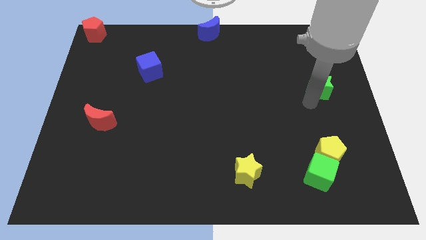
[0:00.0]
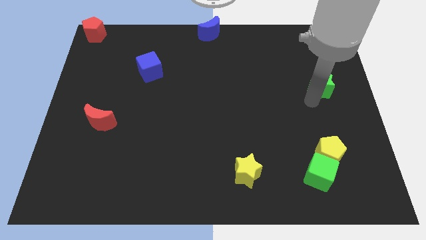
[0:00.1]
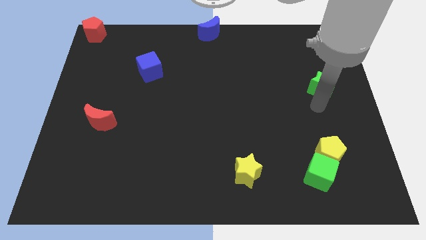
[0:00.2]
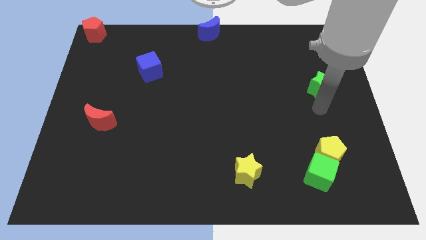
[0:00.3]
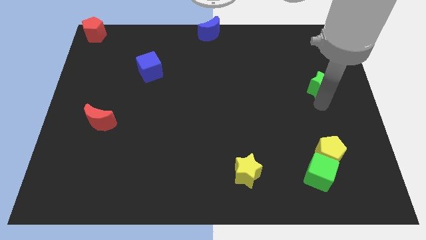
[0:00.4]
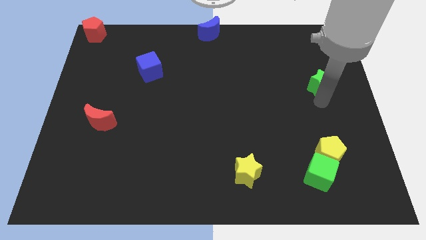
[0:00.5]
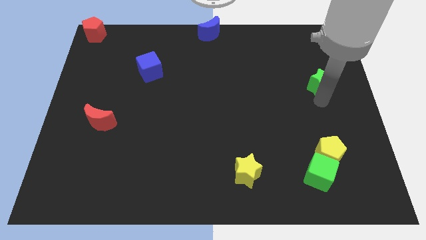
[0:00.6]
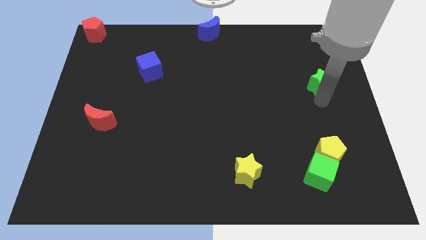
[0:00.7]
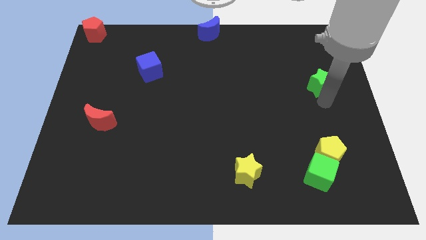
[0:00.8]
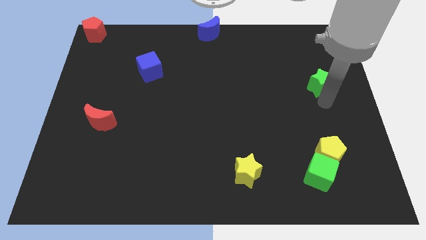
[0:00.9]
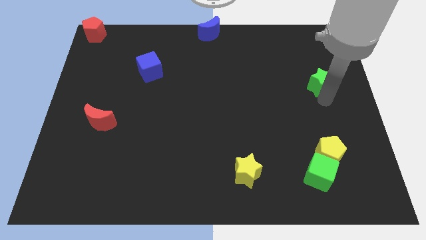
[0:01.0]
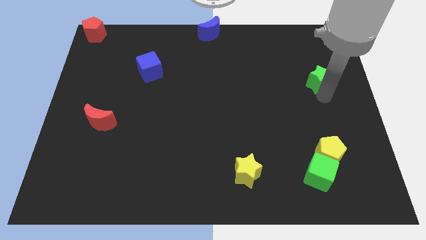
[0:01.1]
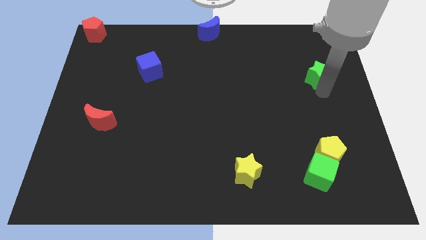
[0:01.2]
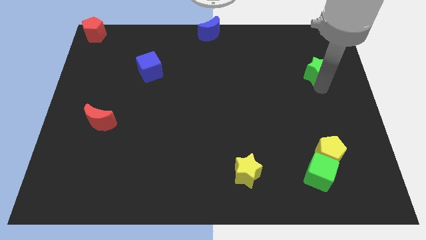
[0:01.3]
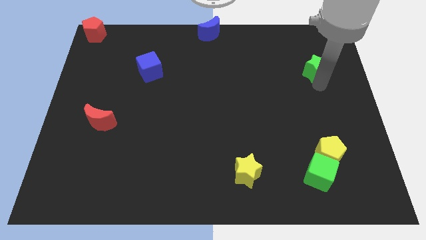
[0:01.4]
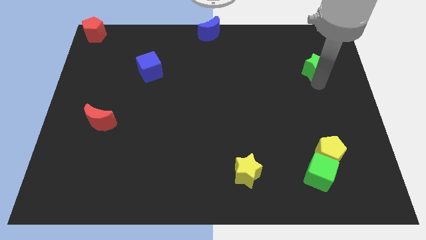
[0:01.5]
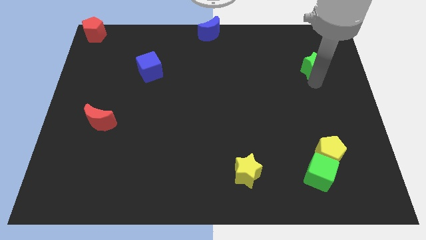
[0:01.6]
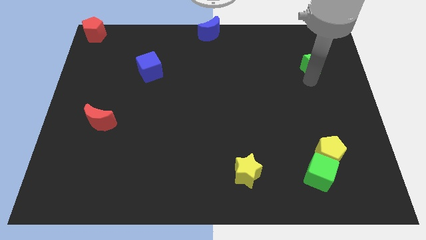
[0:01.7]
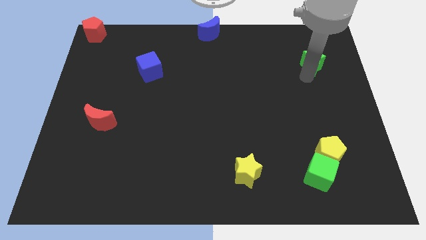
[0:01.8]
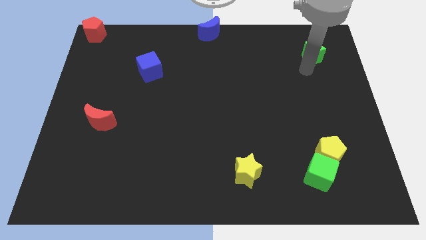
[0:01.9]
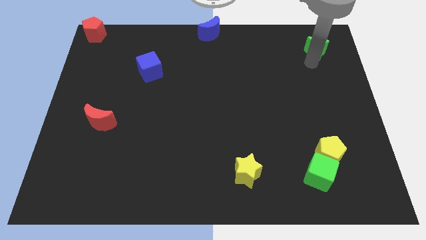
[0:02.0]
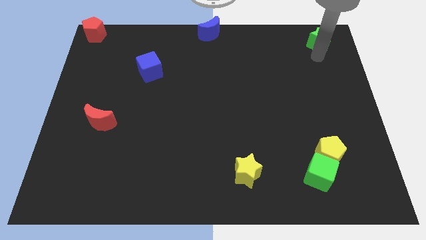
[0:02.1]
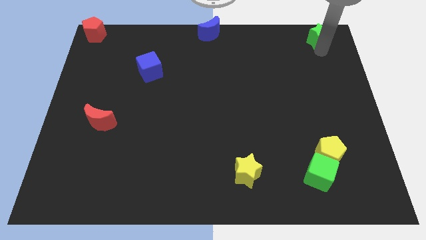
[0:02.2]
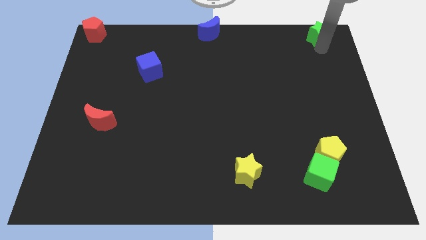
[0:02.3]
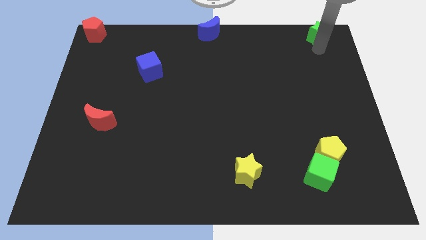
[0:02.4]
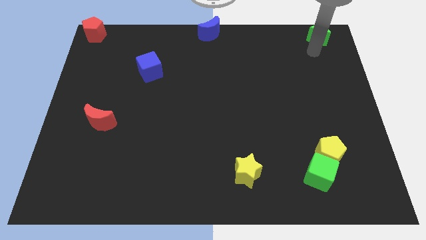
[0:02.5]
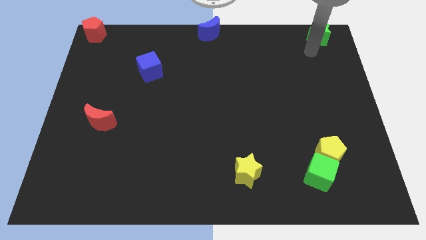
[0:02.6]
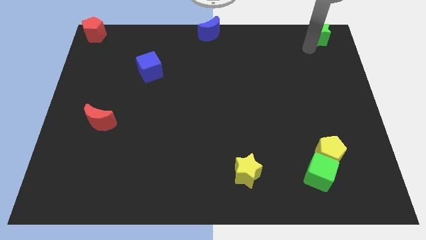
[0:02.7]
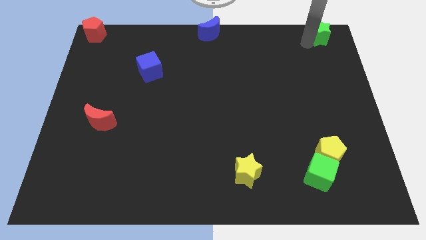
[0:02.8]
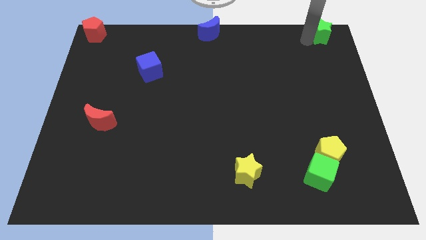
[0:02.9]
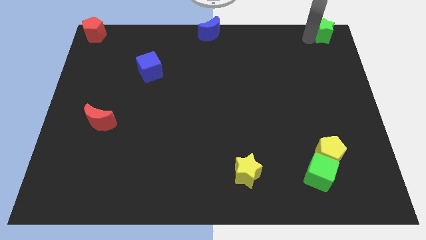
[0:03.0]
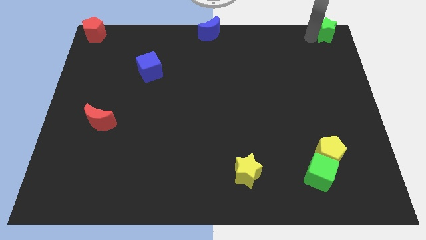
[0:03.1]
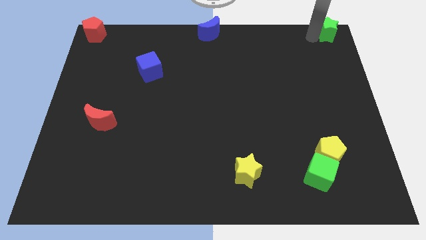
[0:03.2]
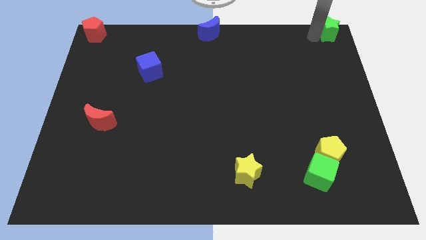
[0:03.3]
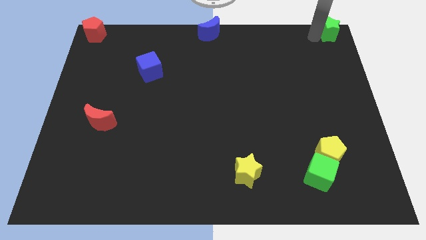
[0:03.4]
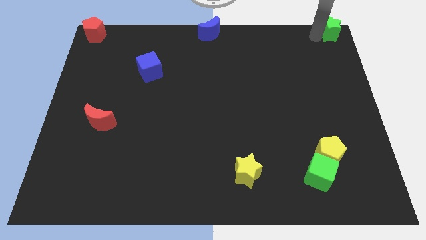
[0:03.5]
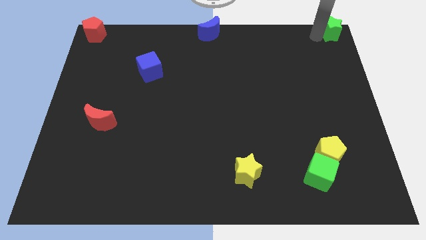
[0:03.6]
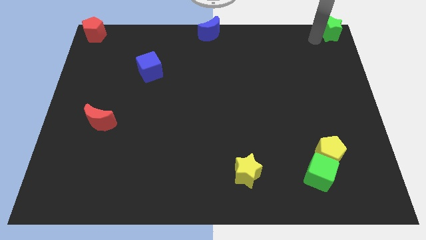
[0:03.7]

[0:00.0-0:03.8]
place green star at the top right corner of the board

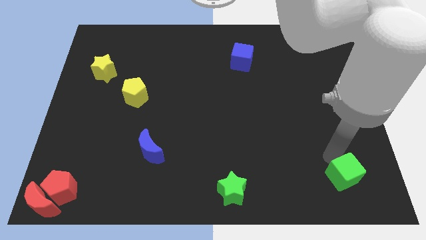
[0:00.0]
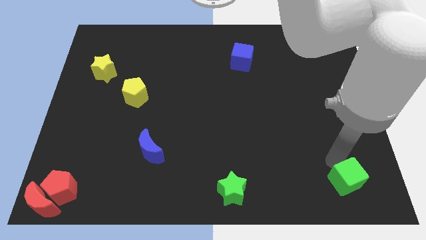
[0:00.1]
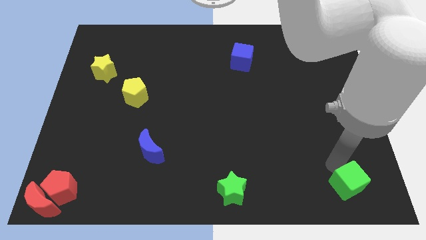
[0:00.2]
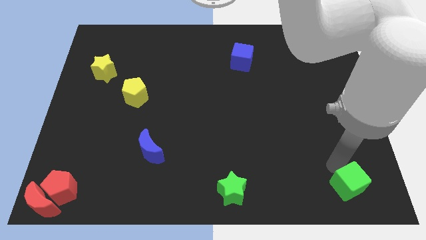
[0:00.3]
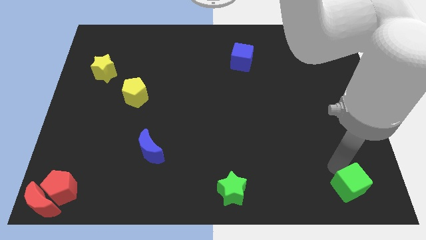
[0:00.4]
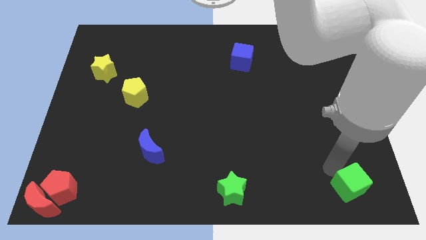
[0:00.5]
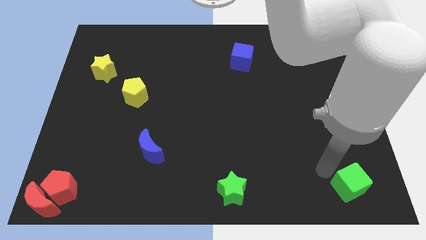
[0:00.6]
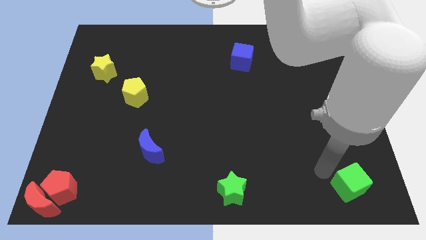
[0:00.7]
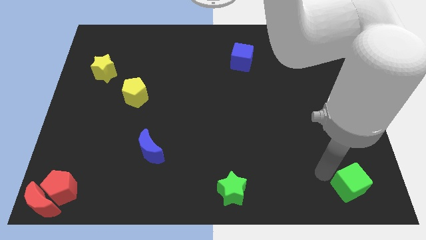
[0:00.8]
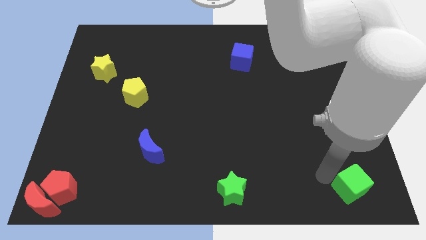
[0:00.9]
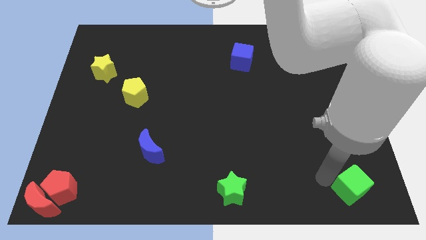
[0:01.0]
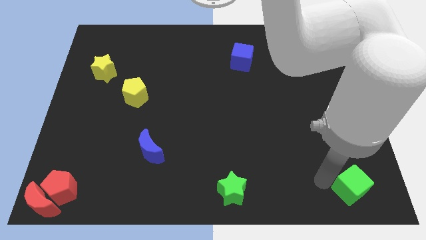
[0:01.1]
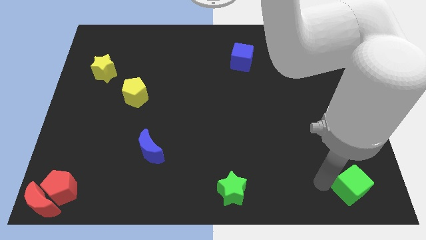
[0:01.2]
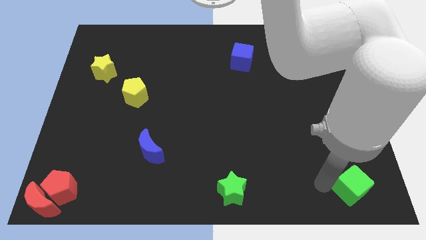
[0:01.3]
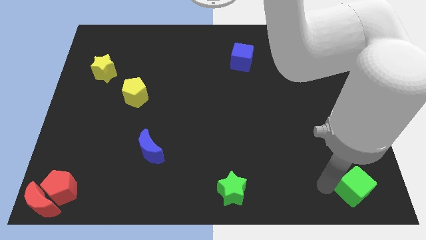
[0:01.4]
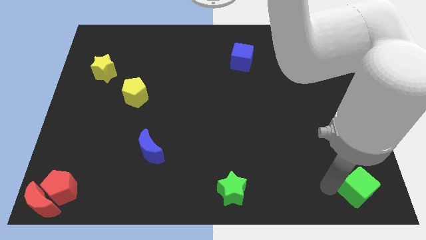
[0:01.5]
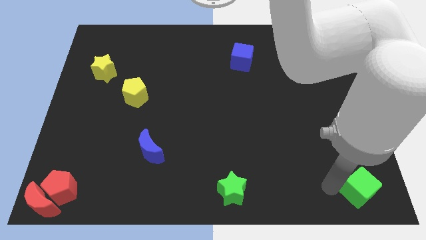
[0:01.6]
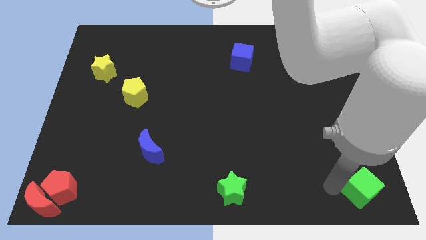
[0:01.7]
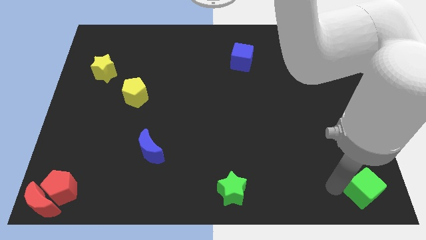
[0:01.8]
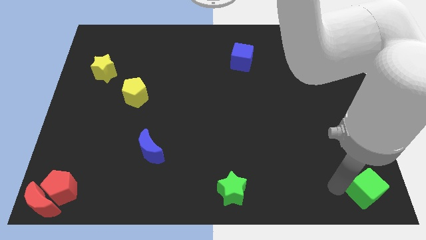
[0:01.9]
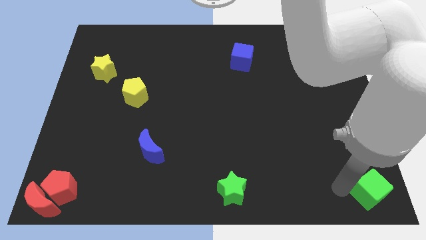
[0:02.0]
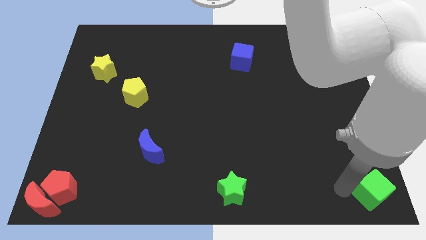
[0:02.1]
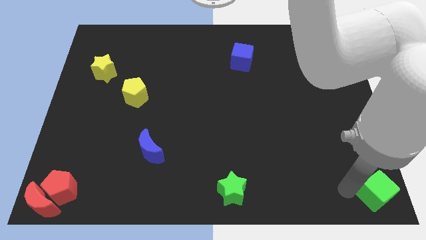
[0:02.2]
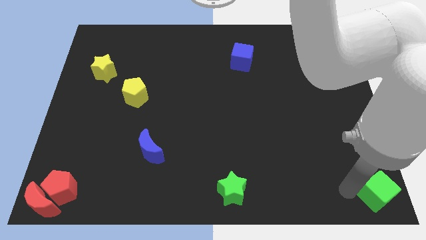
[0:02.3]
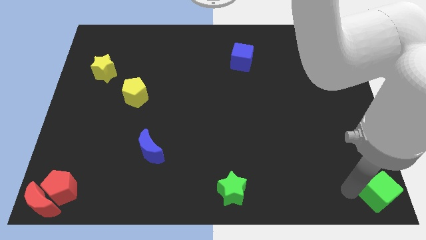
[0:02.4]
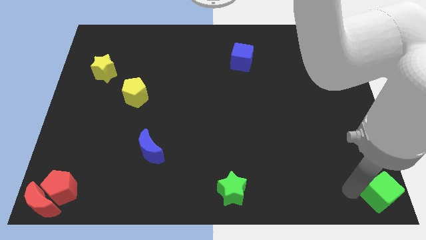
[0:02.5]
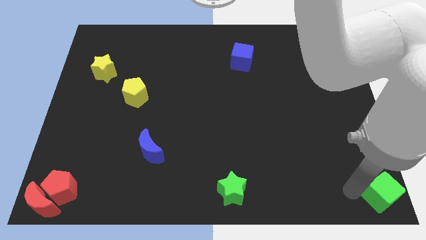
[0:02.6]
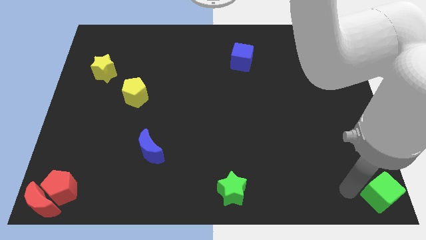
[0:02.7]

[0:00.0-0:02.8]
move green cube towards bottom right corner of the board

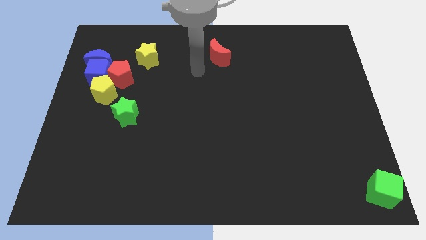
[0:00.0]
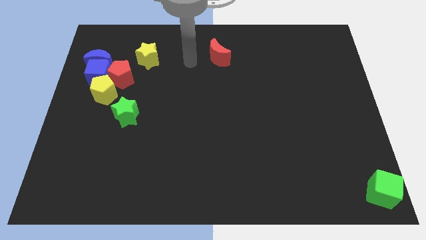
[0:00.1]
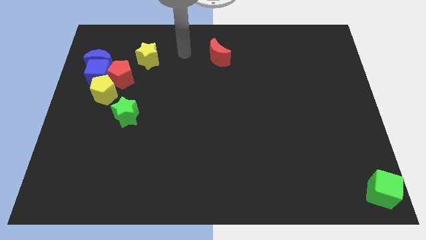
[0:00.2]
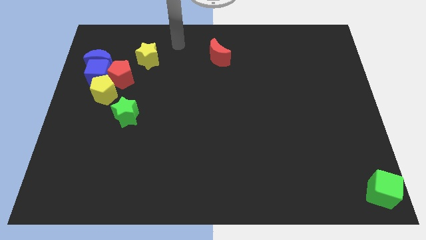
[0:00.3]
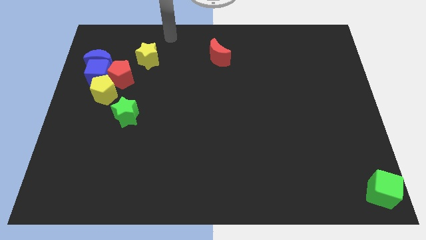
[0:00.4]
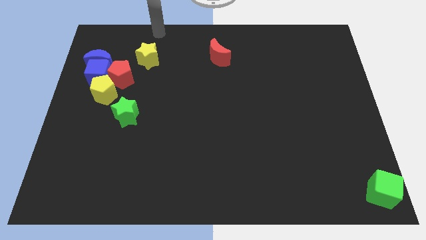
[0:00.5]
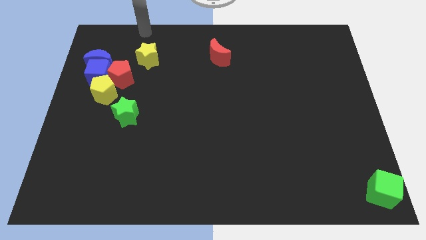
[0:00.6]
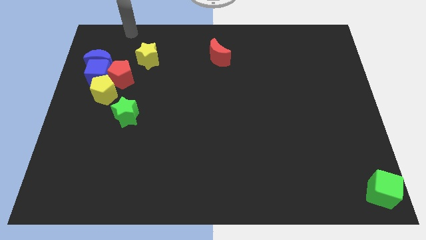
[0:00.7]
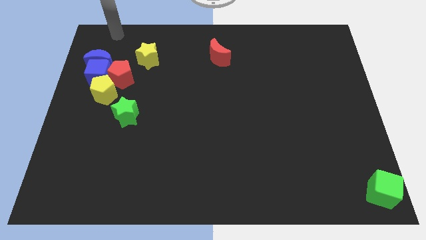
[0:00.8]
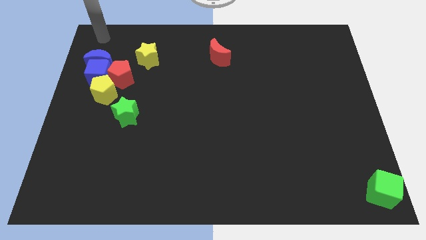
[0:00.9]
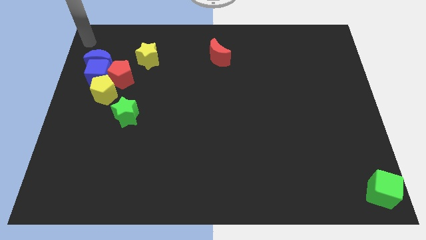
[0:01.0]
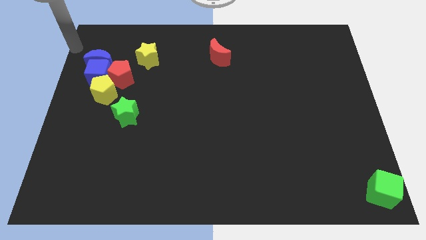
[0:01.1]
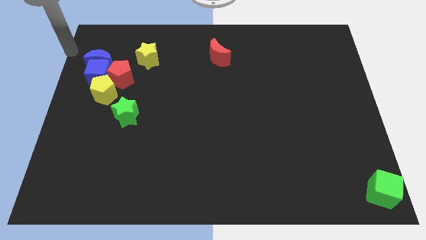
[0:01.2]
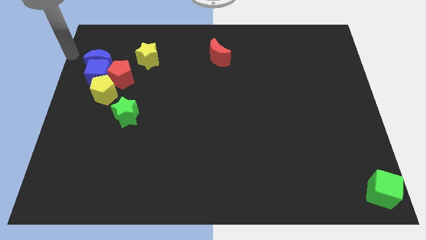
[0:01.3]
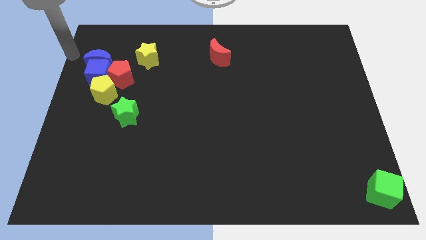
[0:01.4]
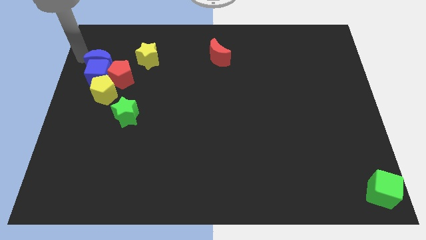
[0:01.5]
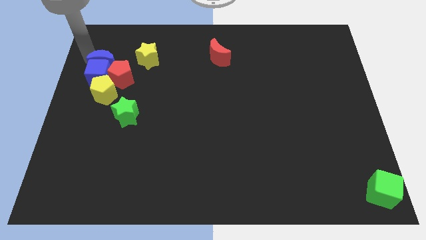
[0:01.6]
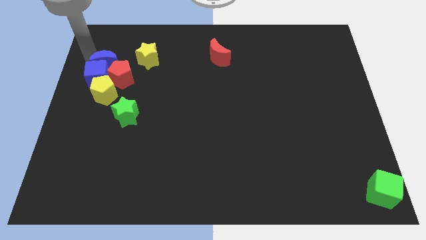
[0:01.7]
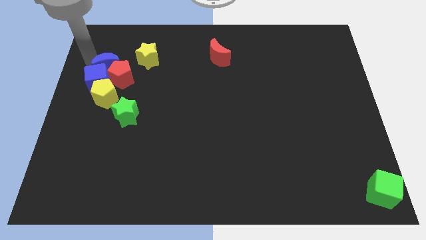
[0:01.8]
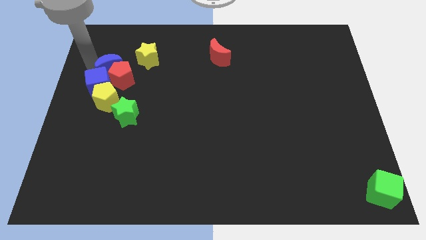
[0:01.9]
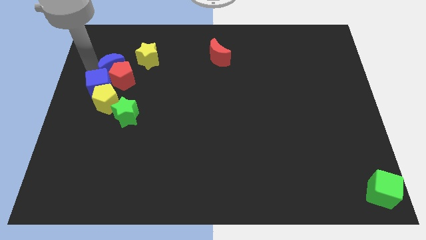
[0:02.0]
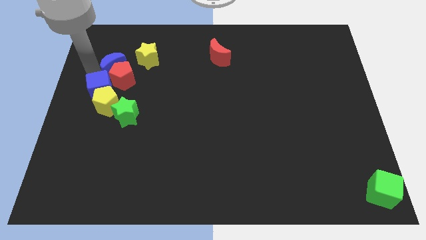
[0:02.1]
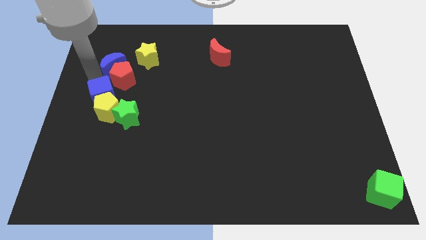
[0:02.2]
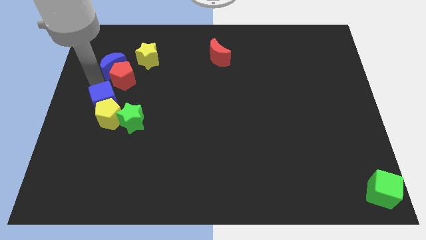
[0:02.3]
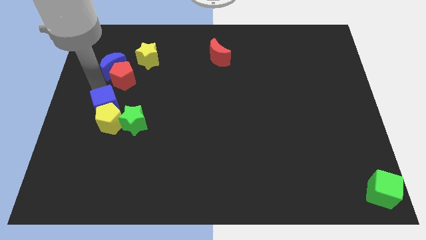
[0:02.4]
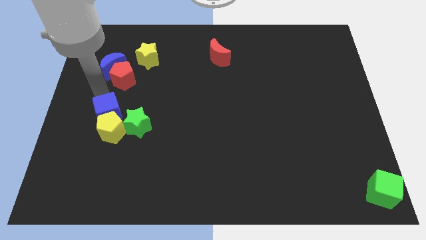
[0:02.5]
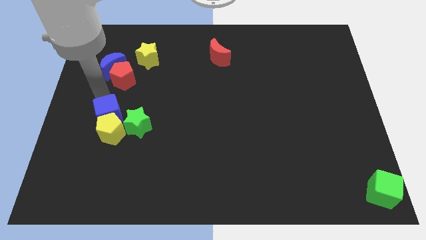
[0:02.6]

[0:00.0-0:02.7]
push blue cube along with the yellow pentagon slightly towards down
